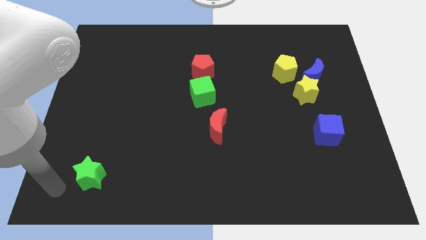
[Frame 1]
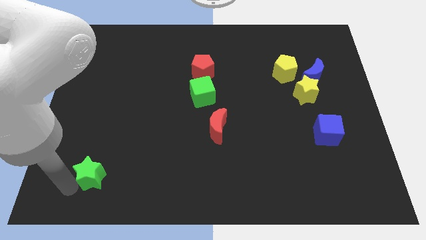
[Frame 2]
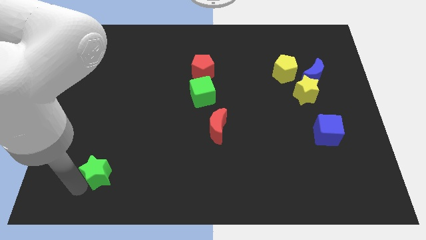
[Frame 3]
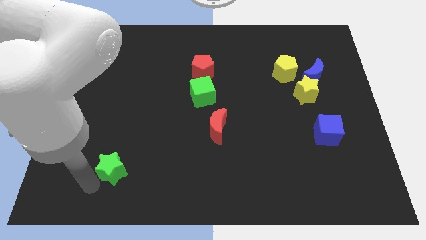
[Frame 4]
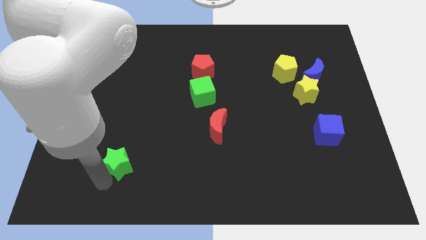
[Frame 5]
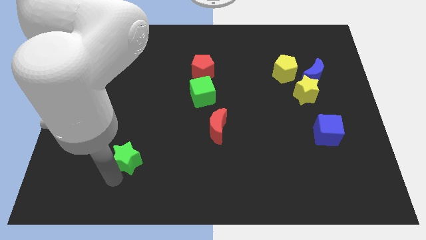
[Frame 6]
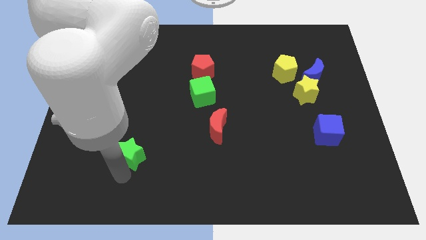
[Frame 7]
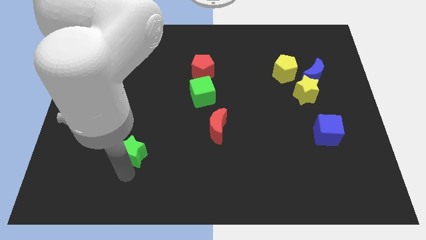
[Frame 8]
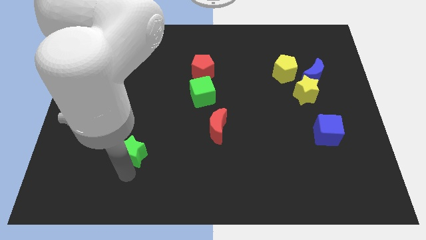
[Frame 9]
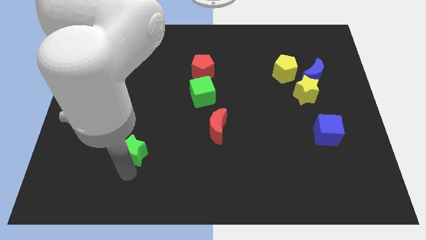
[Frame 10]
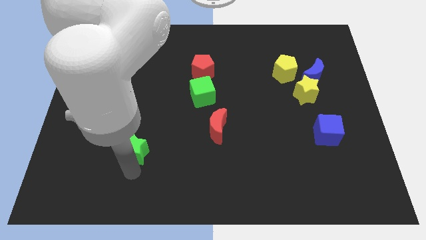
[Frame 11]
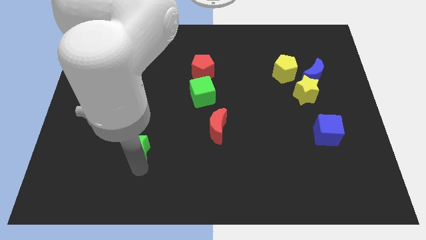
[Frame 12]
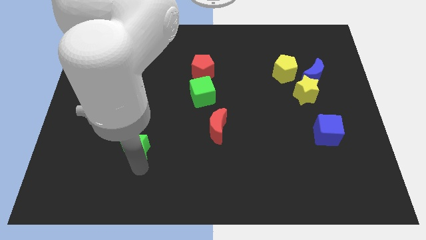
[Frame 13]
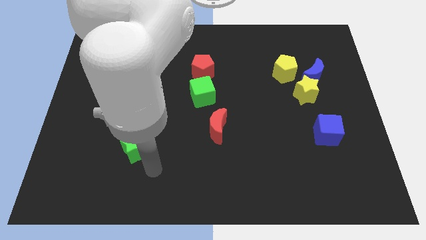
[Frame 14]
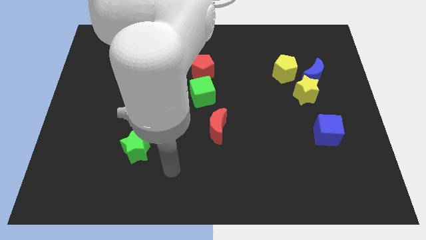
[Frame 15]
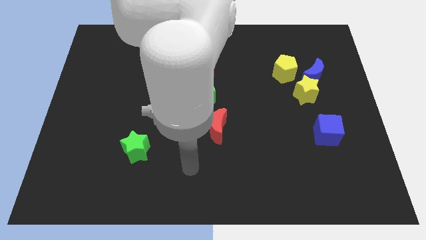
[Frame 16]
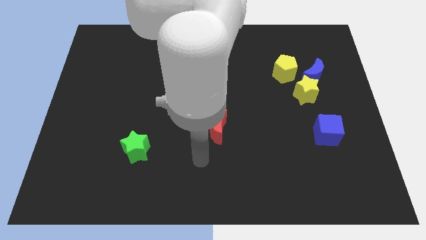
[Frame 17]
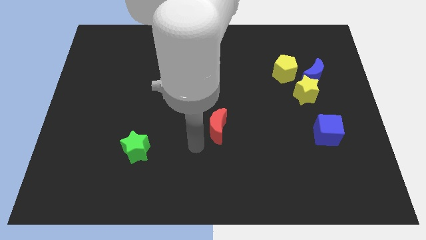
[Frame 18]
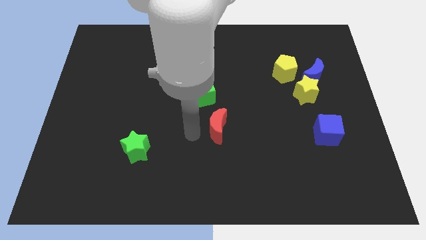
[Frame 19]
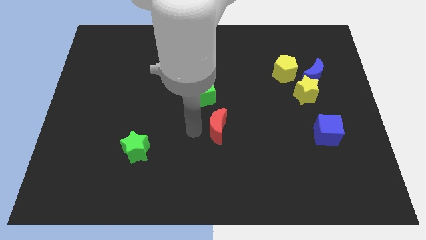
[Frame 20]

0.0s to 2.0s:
move the green star towards the center of the board

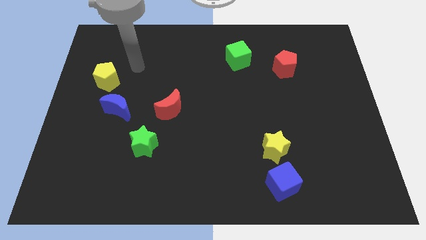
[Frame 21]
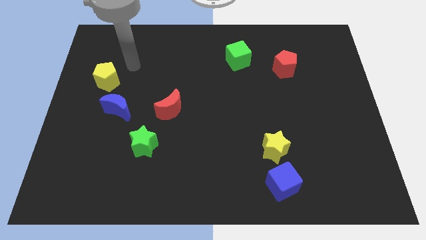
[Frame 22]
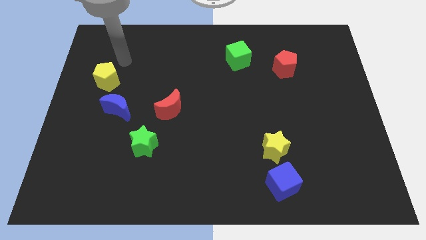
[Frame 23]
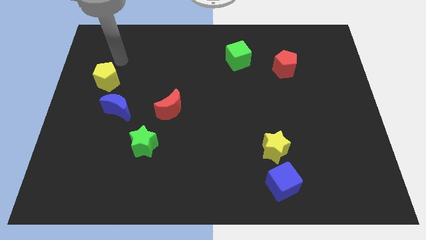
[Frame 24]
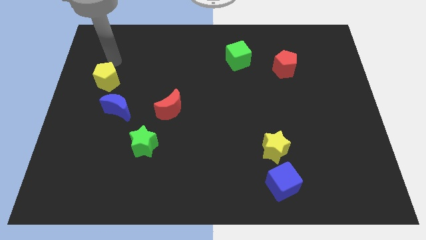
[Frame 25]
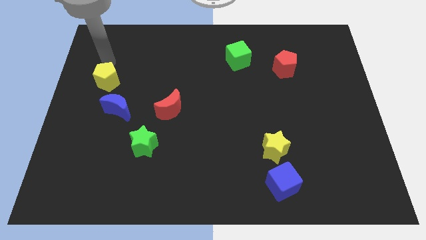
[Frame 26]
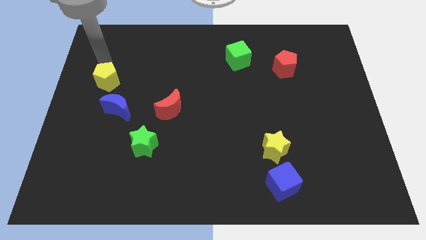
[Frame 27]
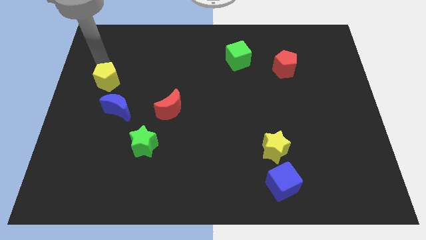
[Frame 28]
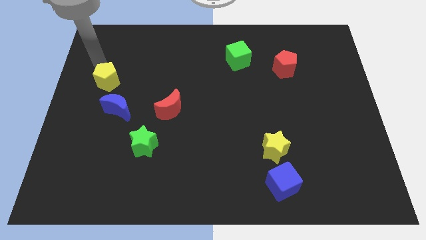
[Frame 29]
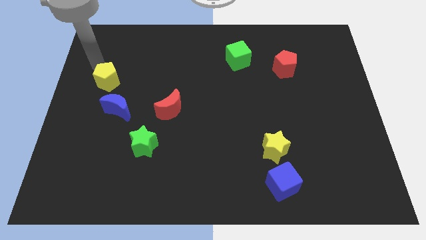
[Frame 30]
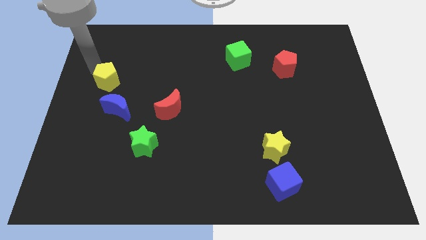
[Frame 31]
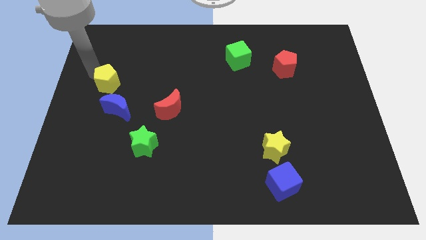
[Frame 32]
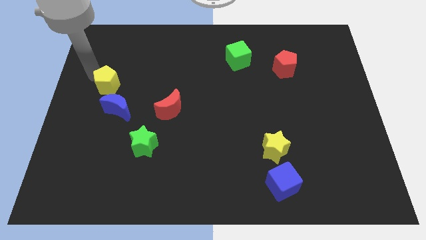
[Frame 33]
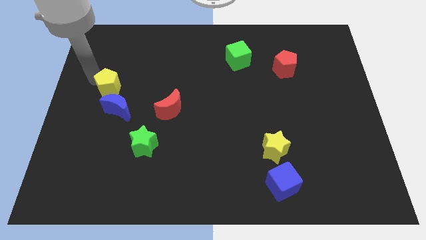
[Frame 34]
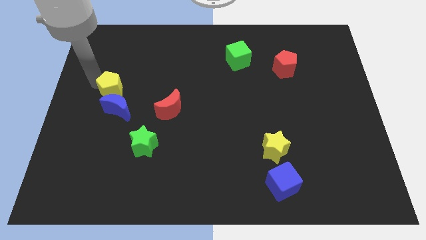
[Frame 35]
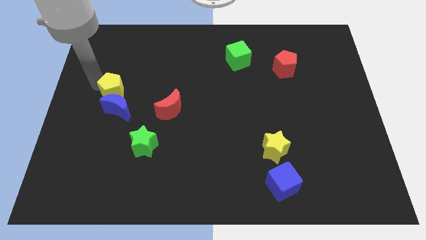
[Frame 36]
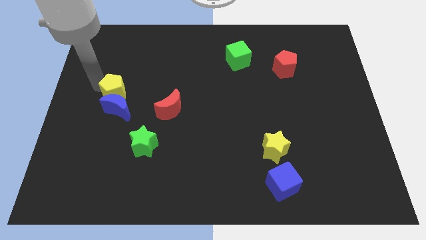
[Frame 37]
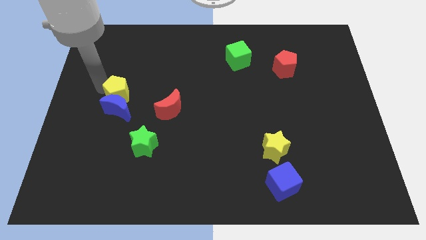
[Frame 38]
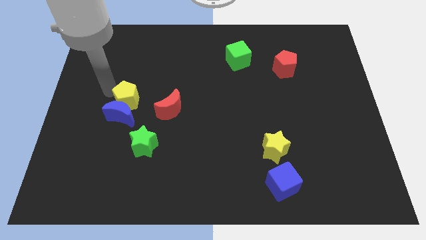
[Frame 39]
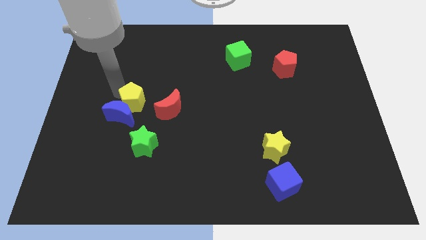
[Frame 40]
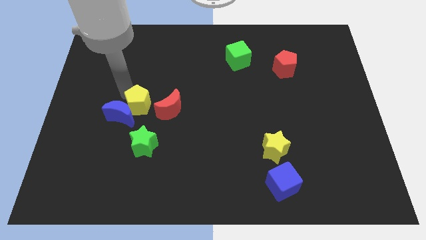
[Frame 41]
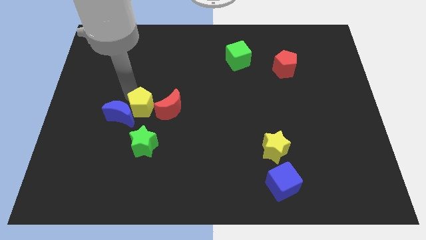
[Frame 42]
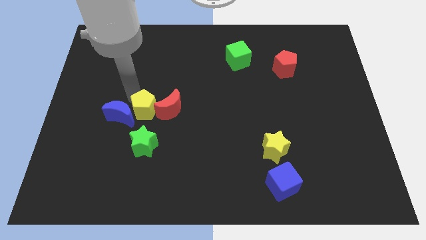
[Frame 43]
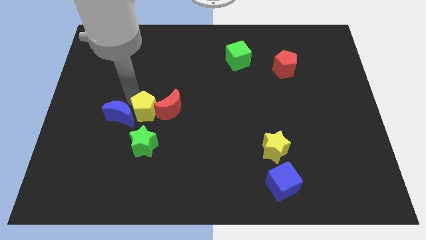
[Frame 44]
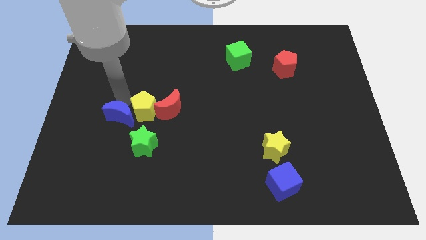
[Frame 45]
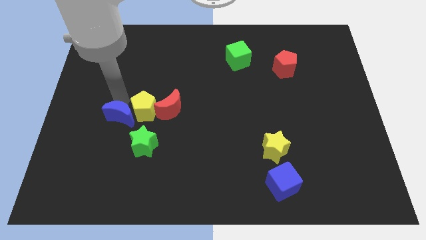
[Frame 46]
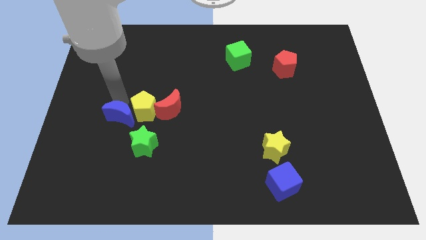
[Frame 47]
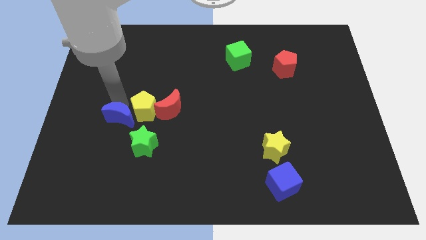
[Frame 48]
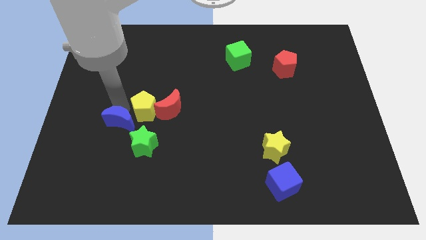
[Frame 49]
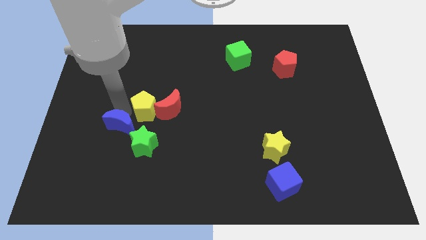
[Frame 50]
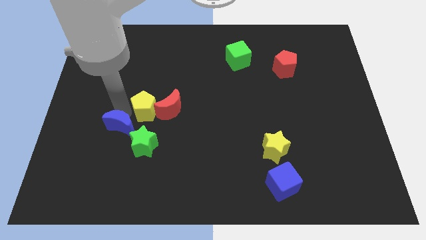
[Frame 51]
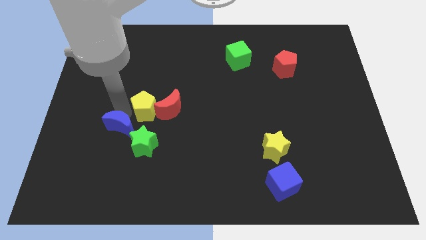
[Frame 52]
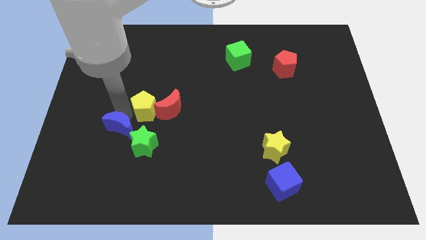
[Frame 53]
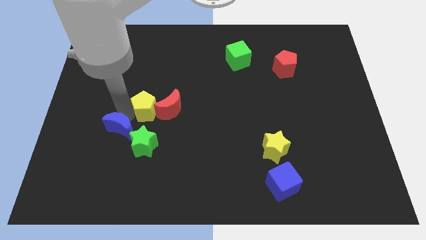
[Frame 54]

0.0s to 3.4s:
push the yellow pentagon into the red moon

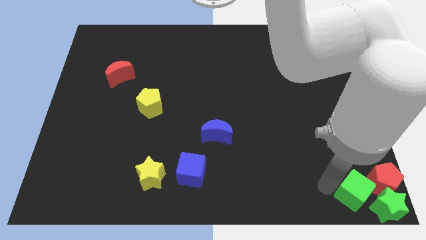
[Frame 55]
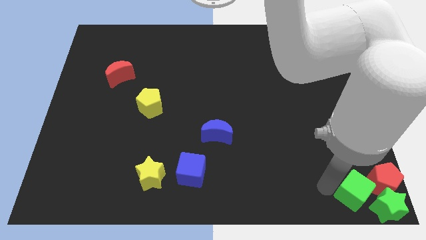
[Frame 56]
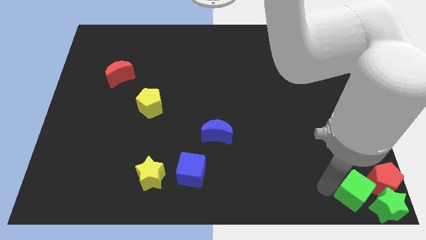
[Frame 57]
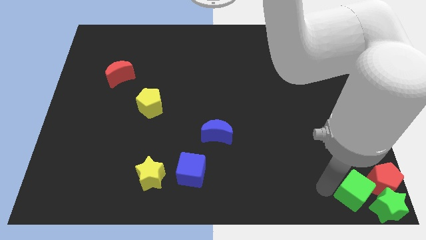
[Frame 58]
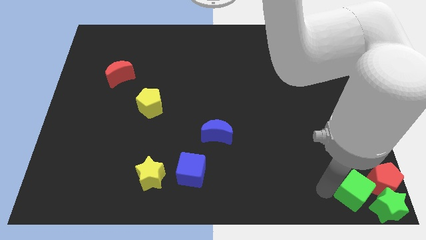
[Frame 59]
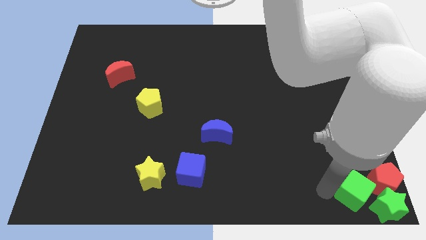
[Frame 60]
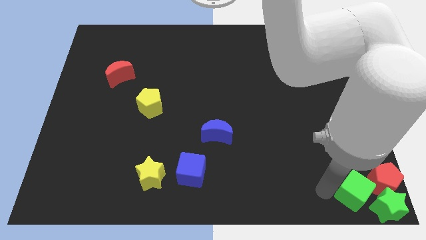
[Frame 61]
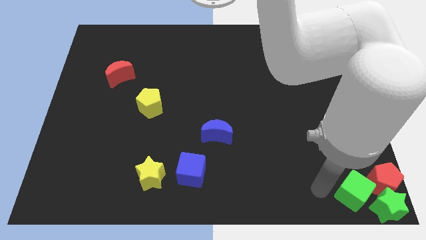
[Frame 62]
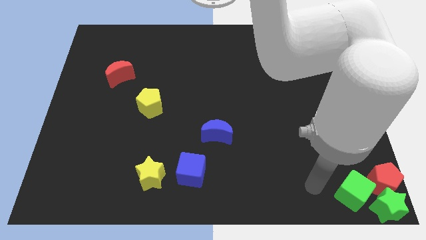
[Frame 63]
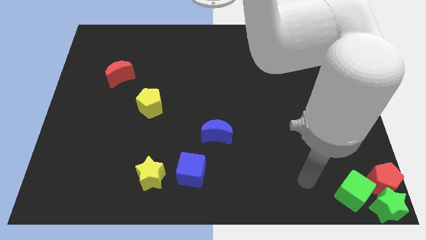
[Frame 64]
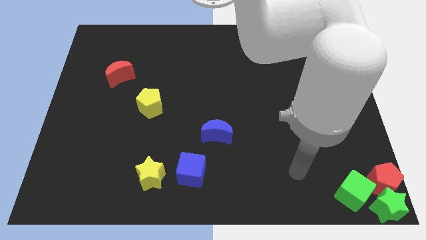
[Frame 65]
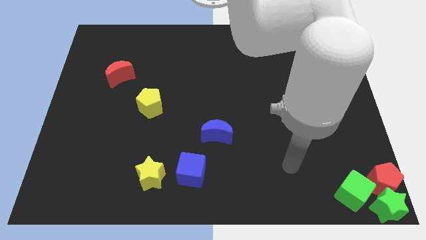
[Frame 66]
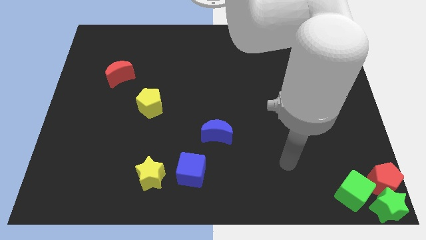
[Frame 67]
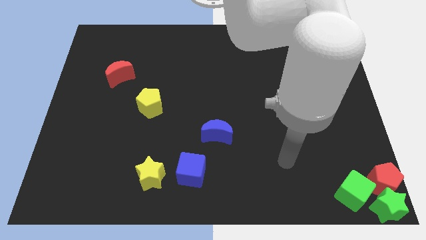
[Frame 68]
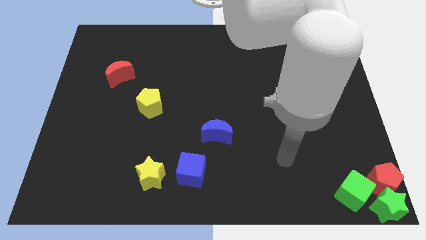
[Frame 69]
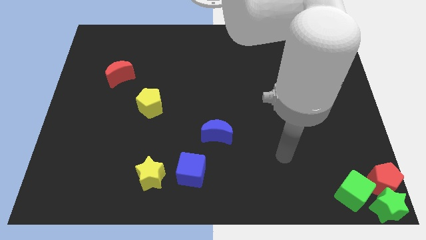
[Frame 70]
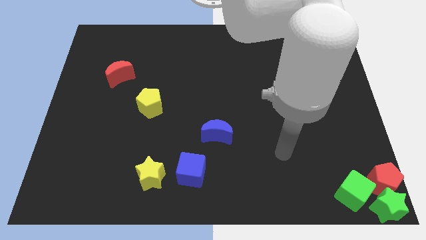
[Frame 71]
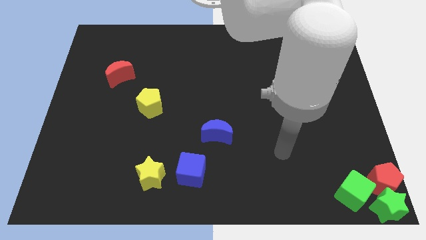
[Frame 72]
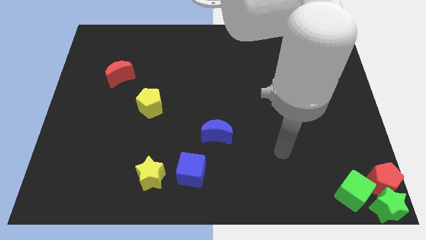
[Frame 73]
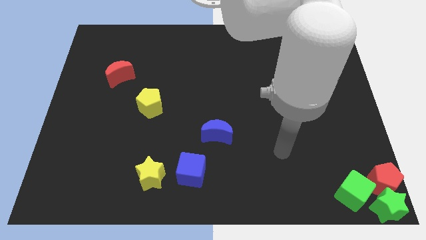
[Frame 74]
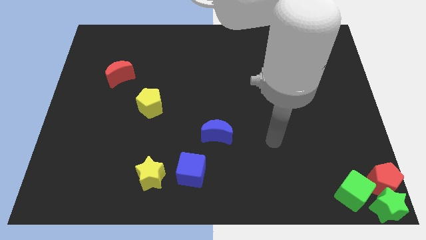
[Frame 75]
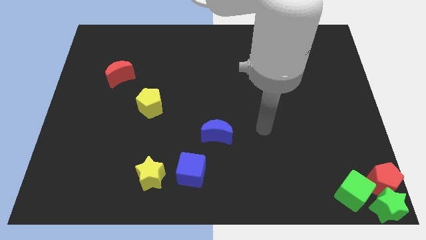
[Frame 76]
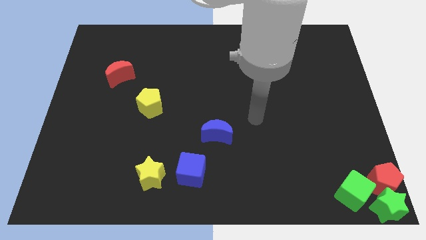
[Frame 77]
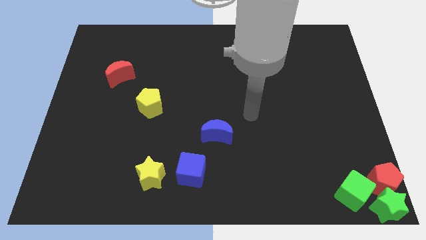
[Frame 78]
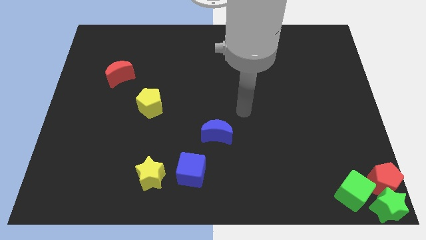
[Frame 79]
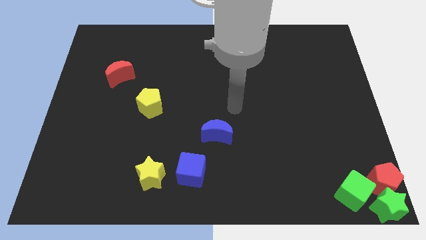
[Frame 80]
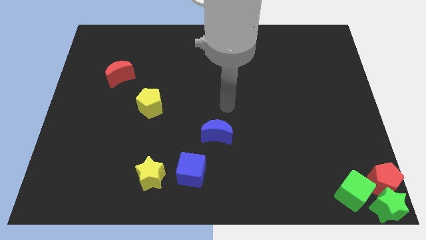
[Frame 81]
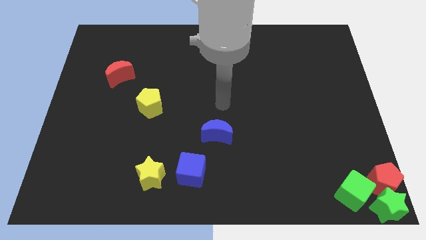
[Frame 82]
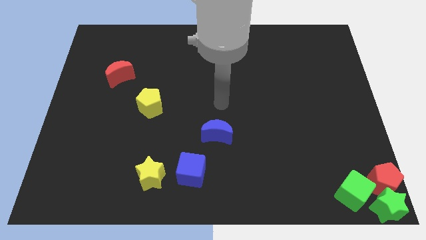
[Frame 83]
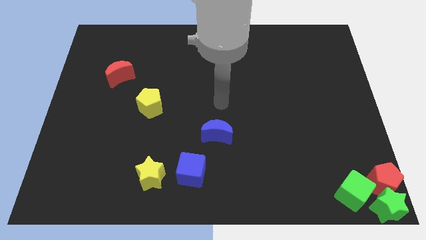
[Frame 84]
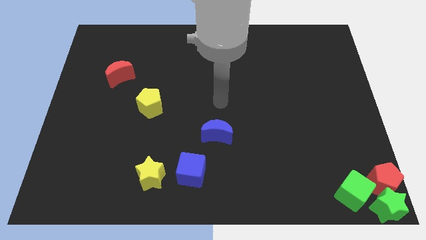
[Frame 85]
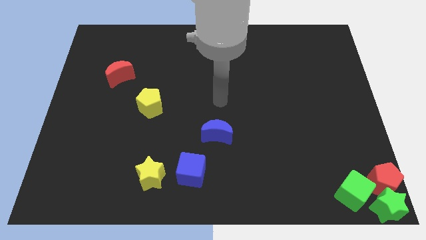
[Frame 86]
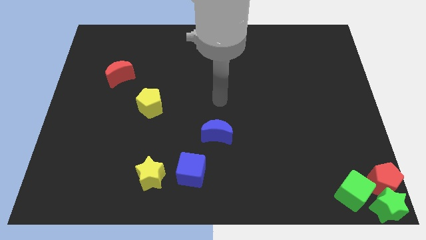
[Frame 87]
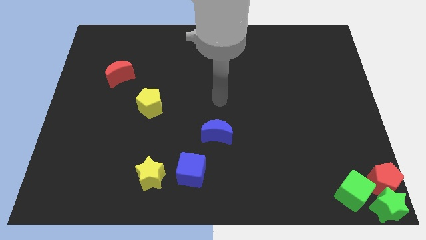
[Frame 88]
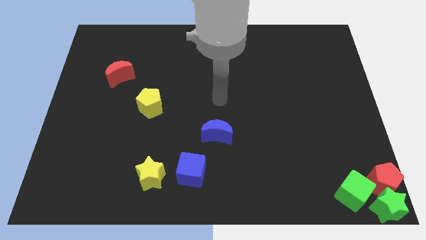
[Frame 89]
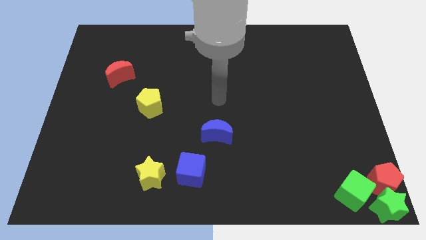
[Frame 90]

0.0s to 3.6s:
place the arm over the blue crescent
